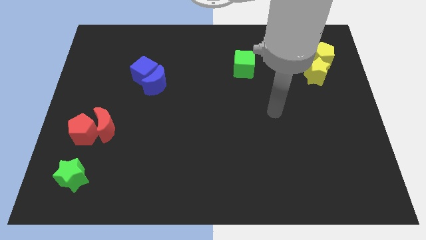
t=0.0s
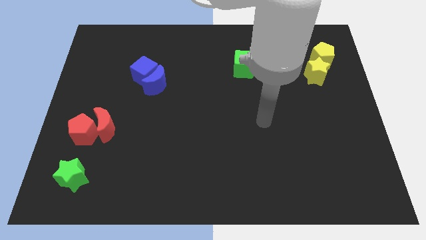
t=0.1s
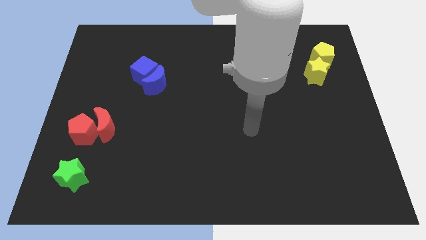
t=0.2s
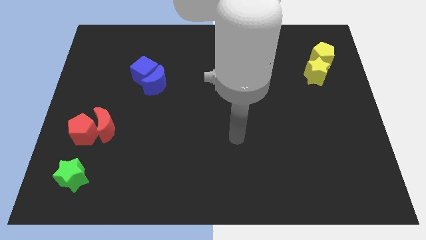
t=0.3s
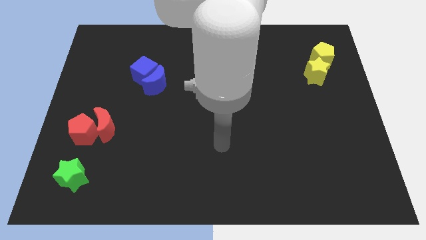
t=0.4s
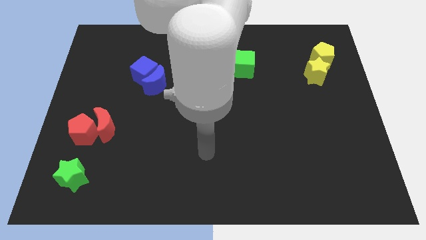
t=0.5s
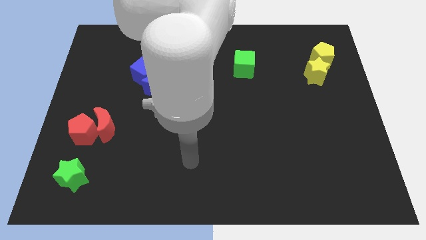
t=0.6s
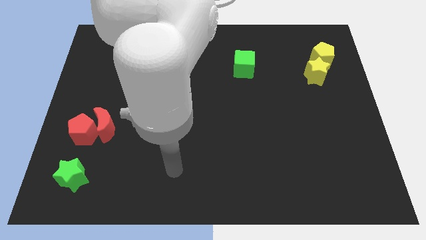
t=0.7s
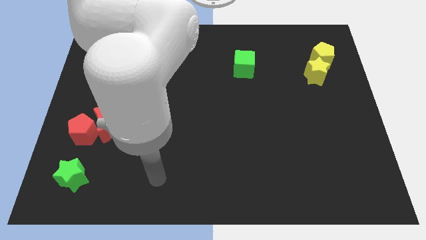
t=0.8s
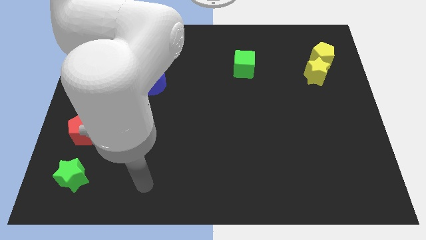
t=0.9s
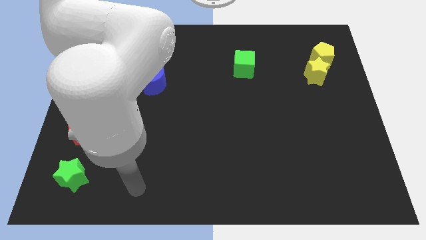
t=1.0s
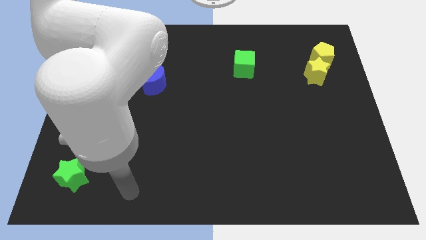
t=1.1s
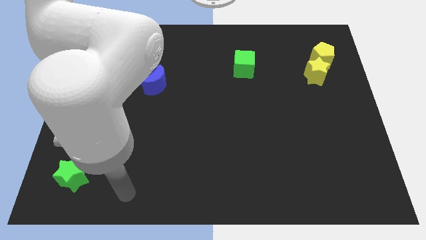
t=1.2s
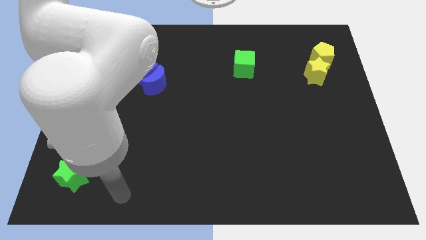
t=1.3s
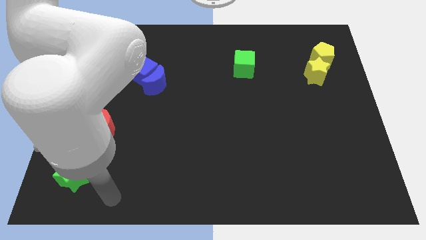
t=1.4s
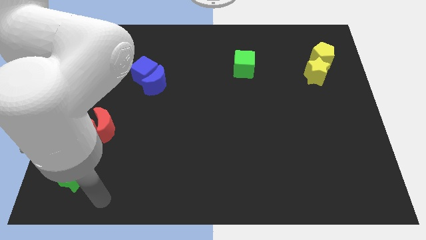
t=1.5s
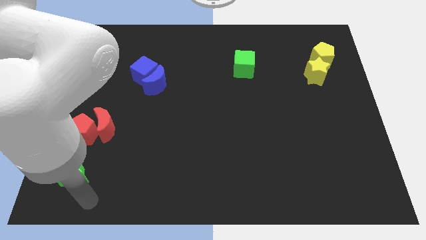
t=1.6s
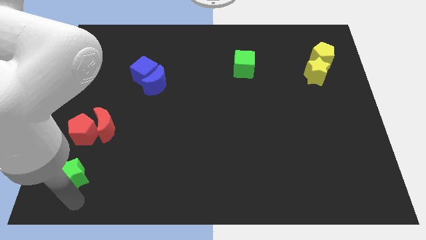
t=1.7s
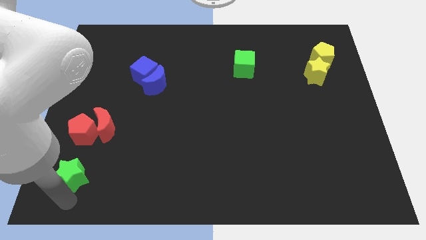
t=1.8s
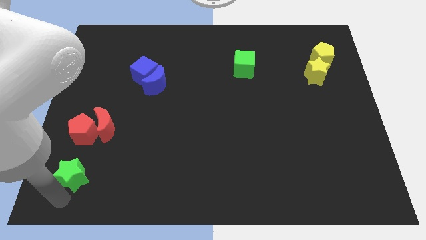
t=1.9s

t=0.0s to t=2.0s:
move your arm towards the green star

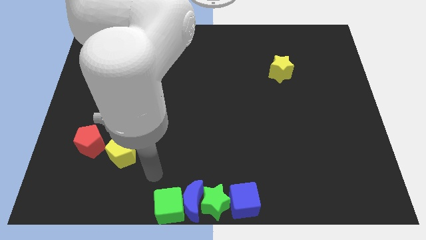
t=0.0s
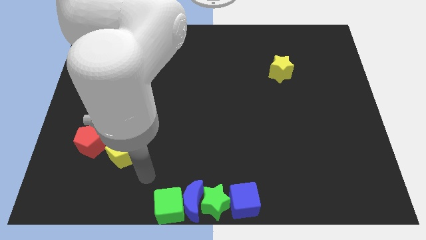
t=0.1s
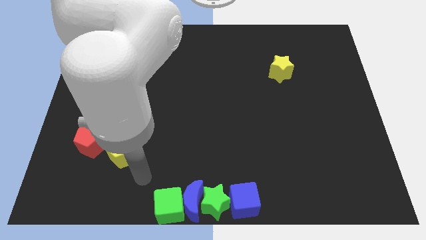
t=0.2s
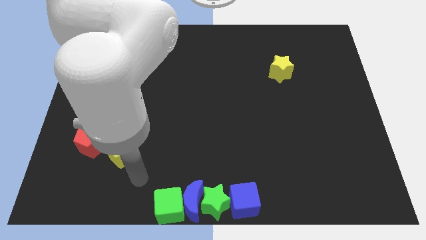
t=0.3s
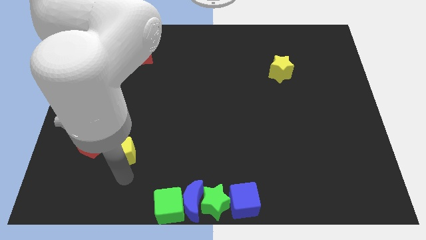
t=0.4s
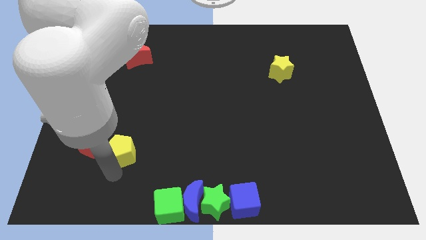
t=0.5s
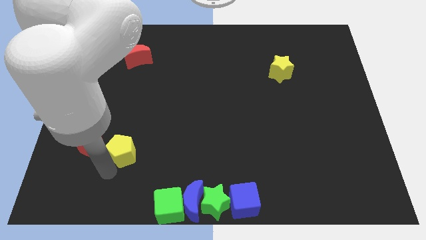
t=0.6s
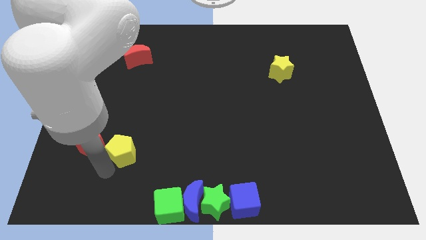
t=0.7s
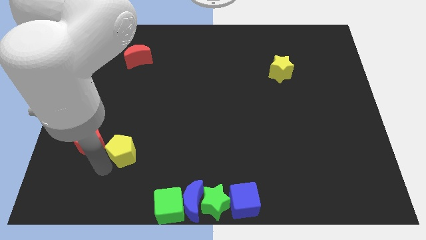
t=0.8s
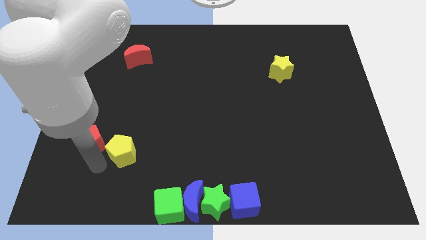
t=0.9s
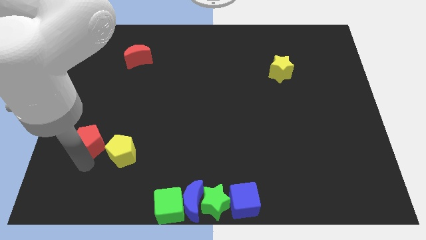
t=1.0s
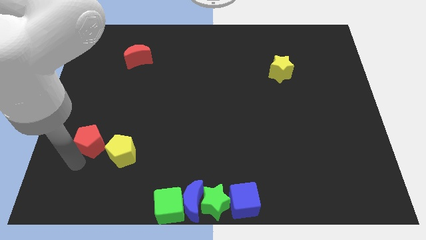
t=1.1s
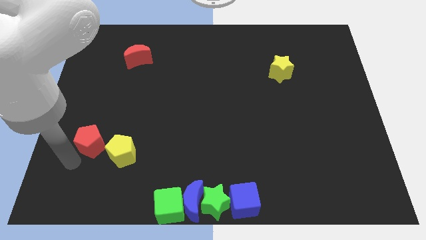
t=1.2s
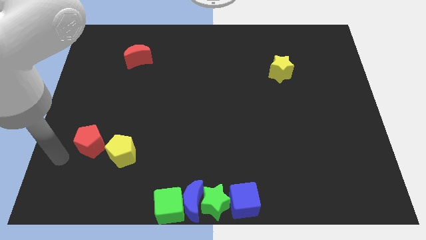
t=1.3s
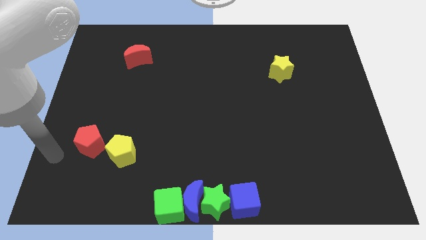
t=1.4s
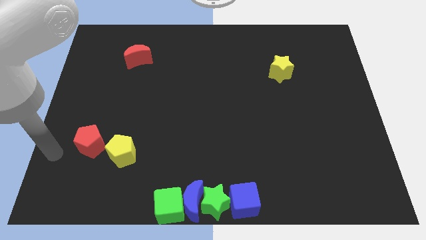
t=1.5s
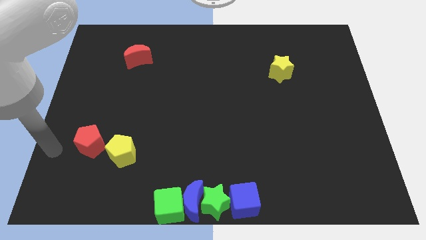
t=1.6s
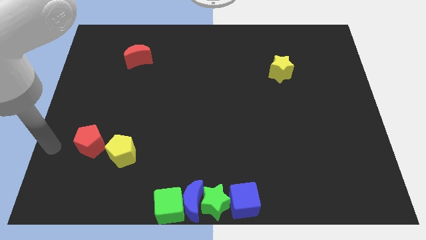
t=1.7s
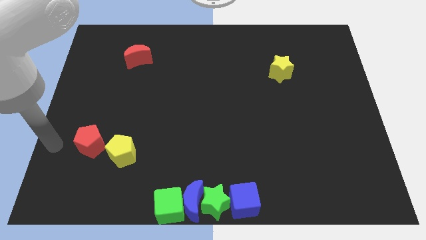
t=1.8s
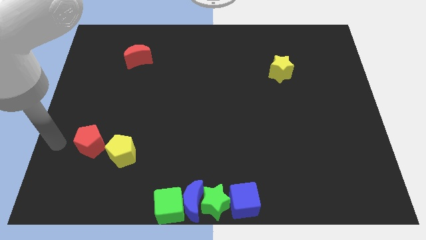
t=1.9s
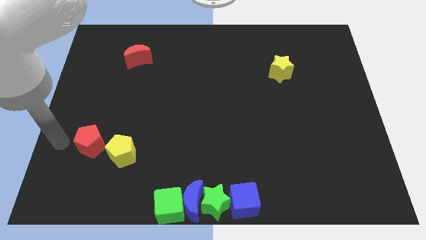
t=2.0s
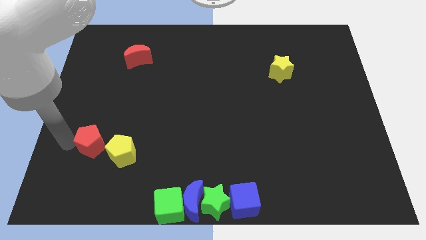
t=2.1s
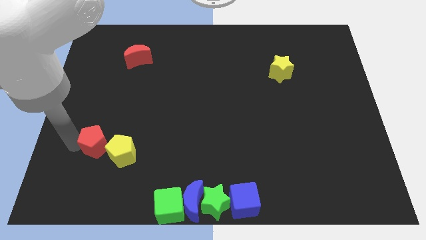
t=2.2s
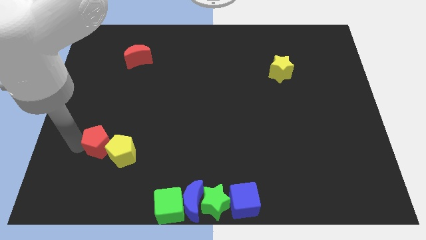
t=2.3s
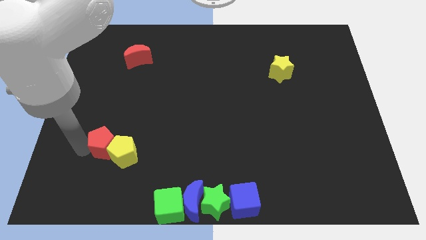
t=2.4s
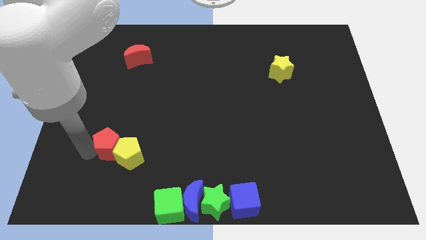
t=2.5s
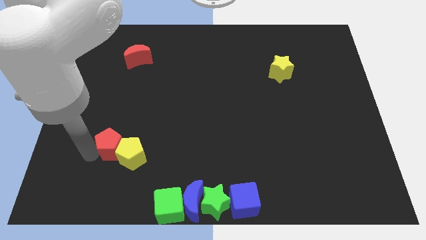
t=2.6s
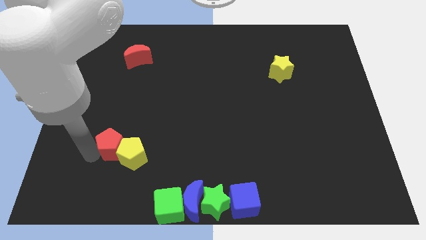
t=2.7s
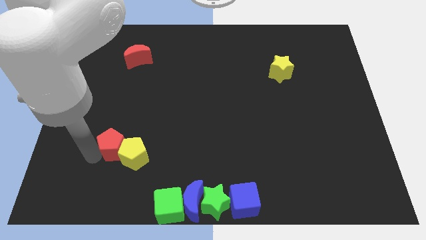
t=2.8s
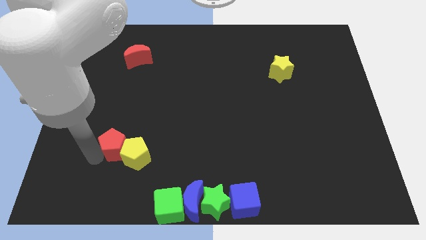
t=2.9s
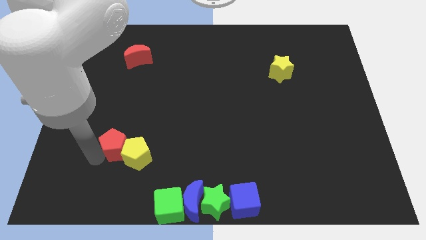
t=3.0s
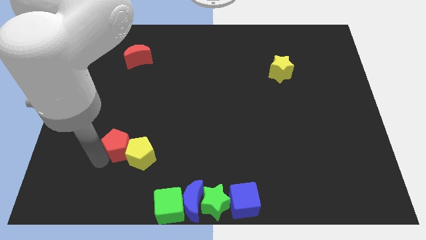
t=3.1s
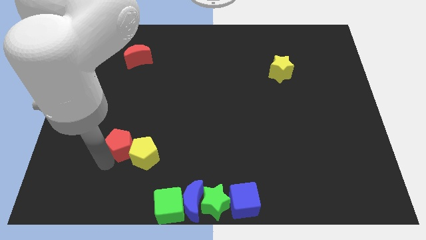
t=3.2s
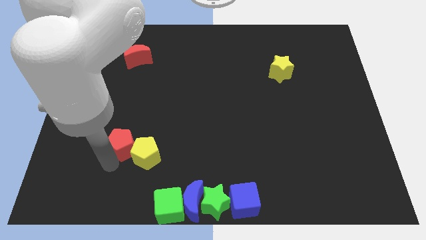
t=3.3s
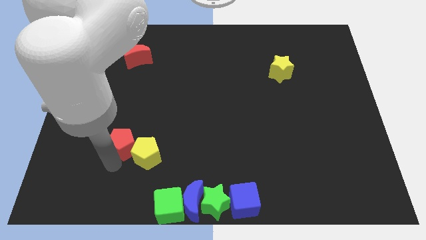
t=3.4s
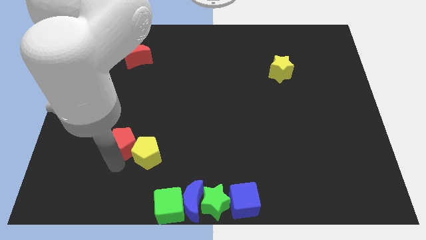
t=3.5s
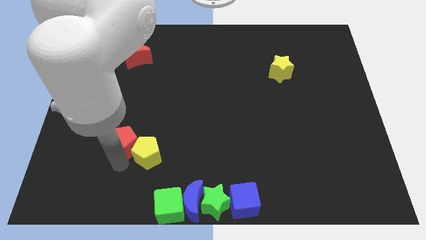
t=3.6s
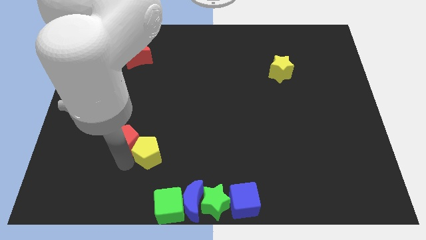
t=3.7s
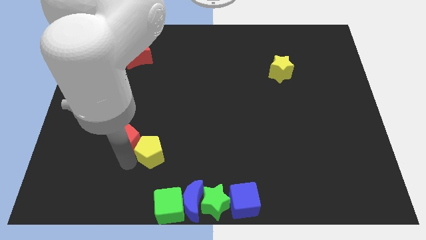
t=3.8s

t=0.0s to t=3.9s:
move the red pentagon into the yellow pentagon

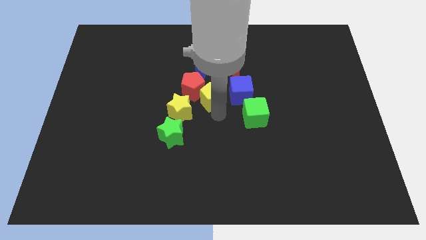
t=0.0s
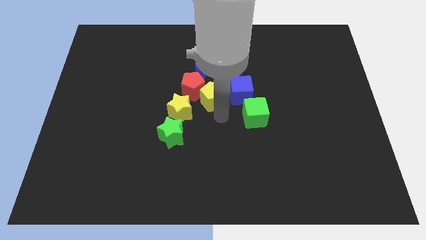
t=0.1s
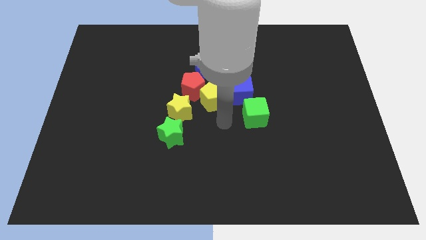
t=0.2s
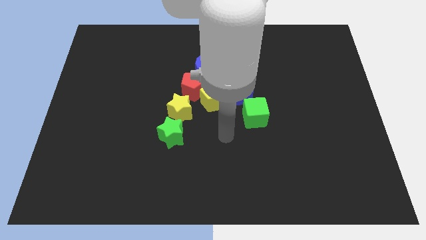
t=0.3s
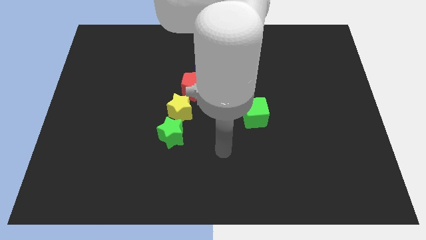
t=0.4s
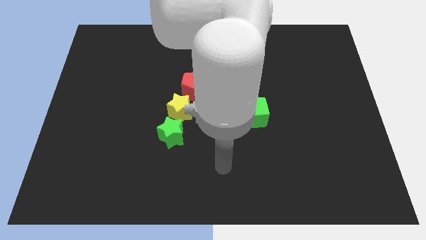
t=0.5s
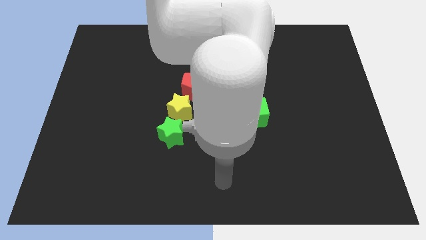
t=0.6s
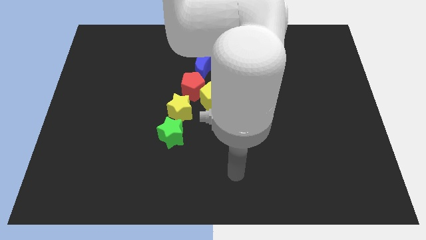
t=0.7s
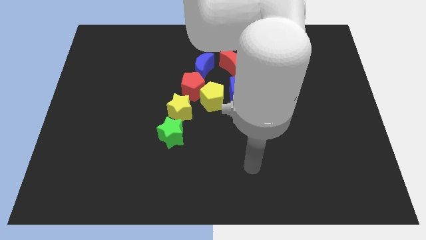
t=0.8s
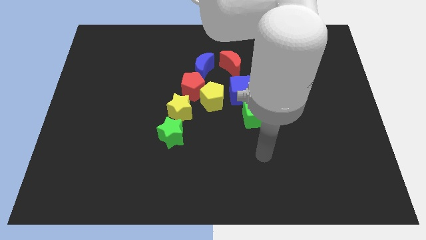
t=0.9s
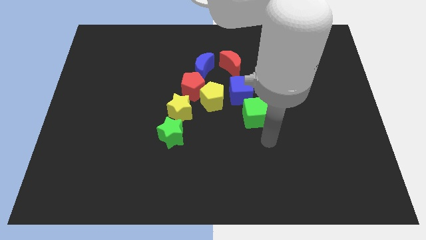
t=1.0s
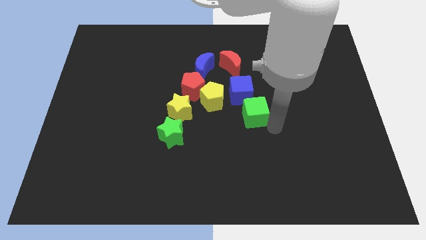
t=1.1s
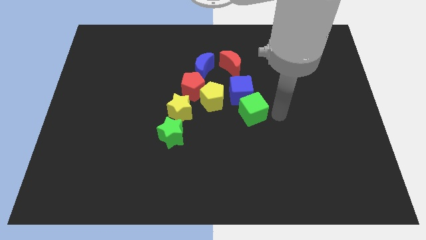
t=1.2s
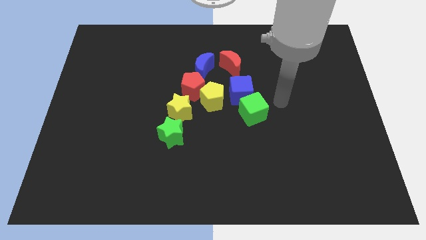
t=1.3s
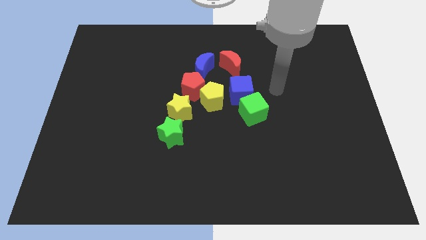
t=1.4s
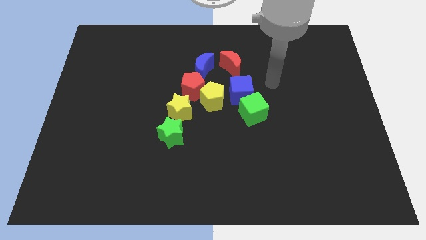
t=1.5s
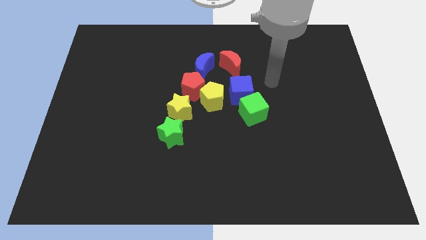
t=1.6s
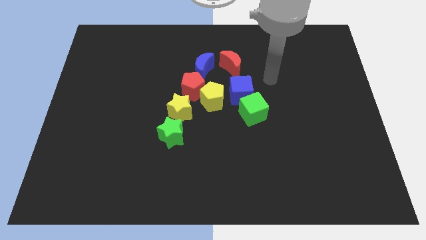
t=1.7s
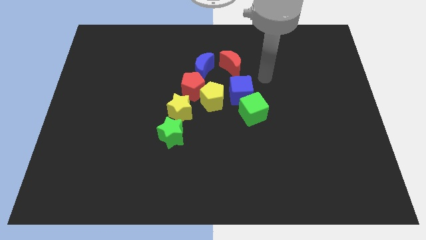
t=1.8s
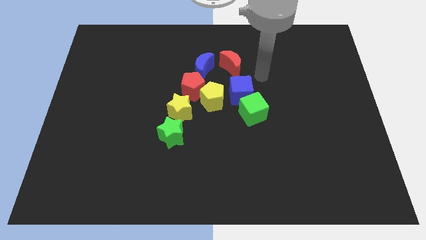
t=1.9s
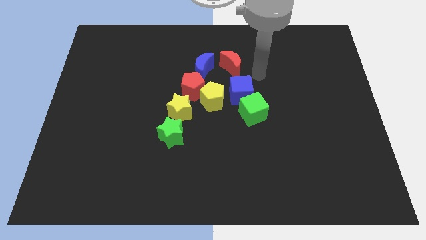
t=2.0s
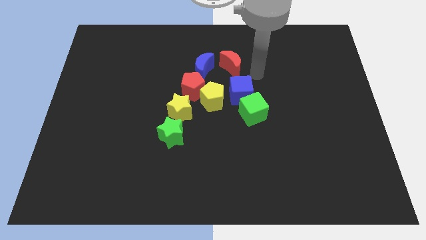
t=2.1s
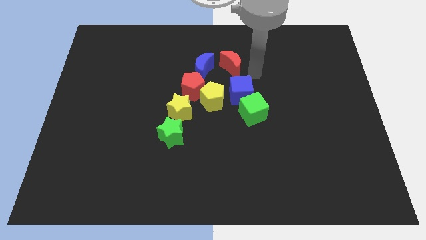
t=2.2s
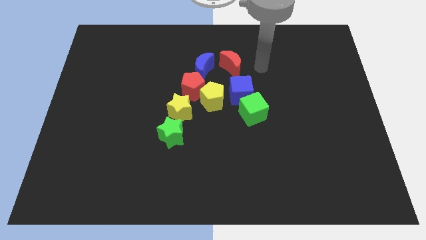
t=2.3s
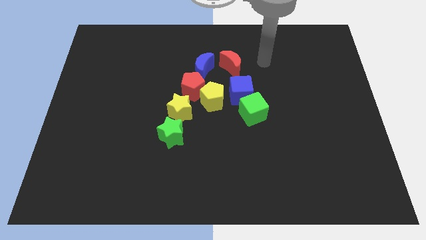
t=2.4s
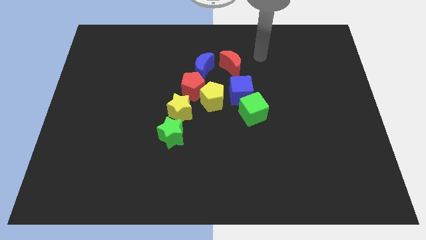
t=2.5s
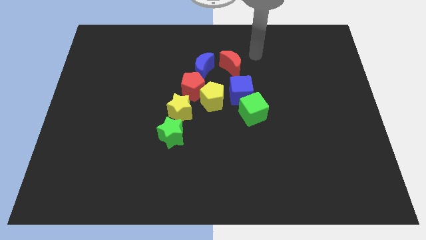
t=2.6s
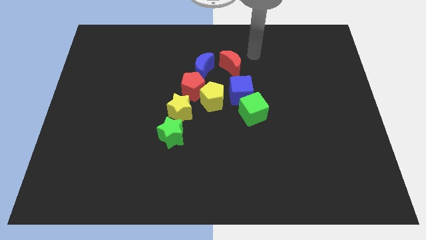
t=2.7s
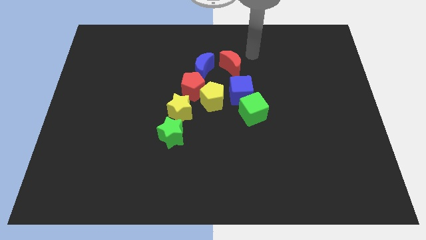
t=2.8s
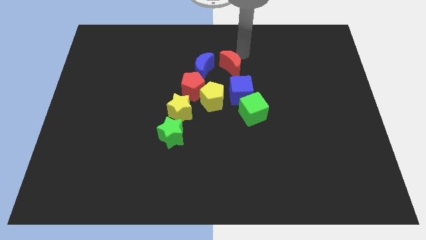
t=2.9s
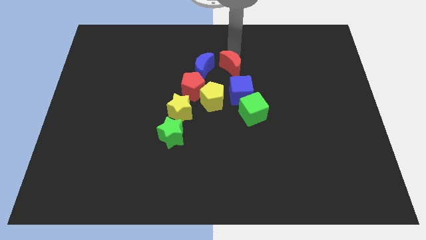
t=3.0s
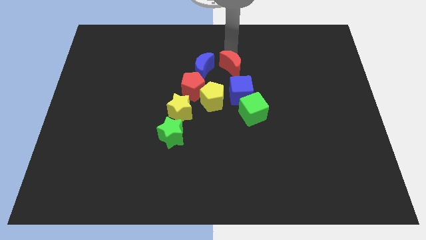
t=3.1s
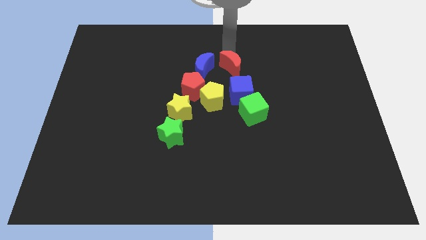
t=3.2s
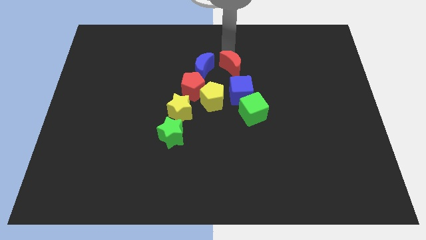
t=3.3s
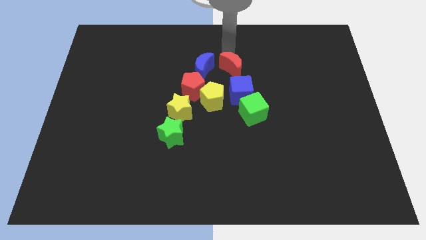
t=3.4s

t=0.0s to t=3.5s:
touch the green cube and red crescent
